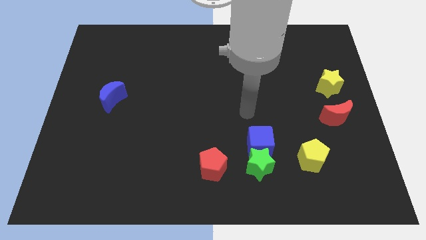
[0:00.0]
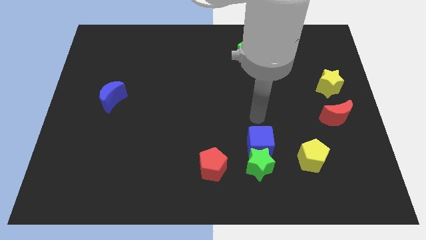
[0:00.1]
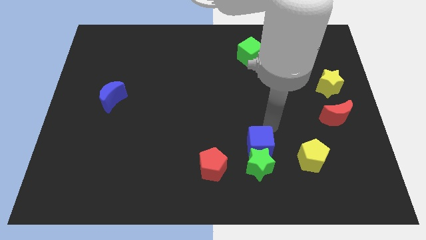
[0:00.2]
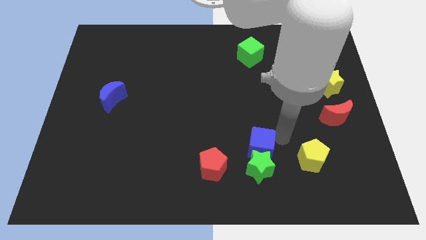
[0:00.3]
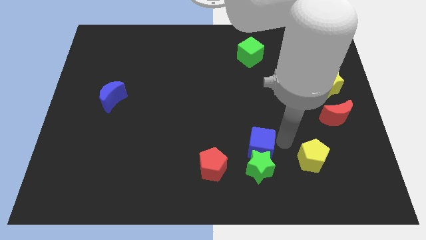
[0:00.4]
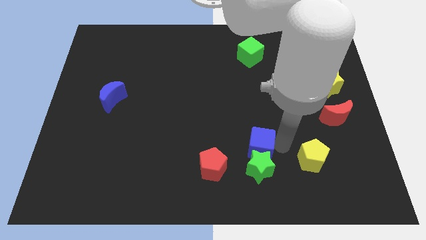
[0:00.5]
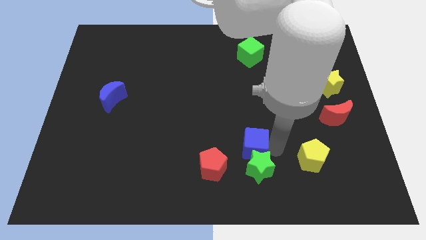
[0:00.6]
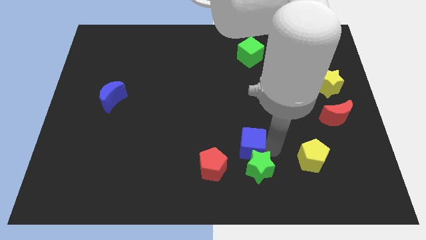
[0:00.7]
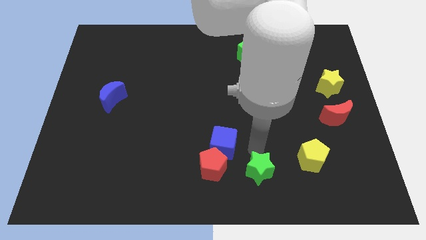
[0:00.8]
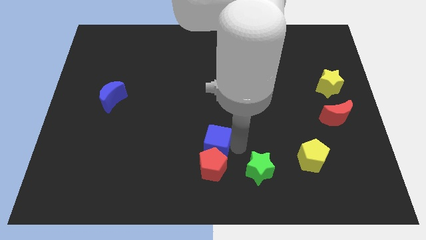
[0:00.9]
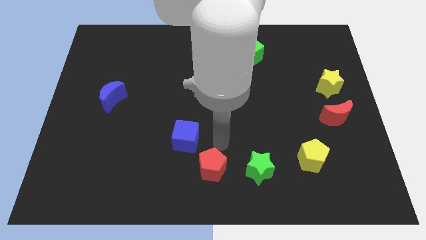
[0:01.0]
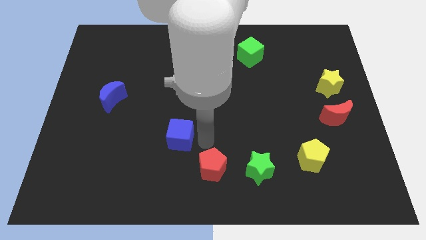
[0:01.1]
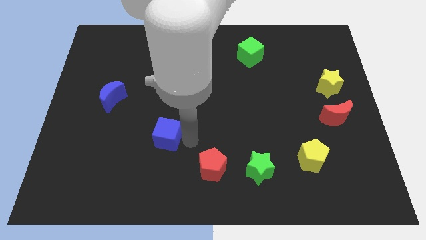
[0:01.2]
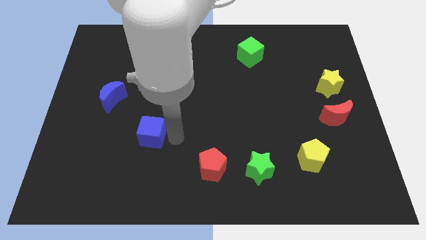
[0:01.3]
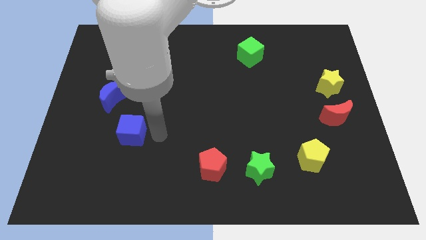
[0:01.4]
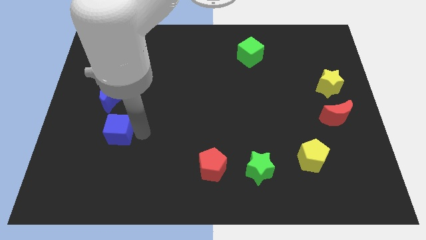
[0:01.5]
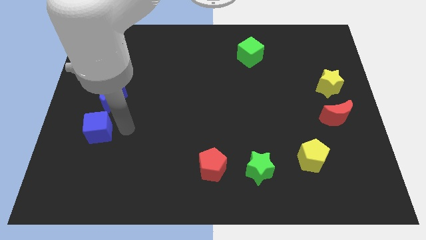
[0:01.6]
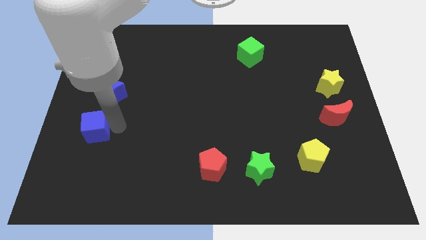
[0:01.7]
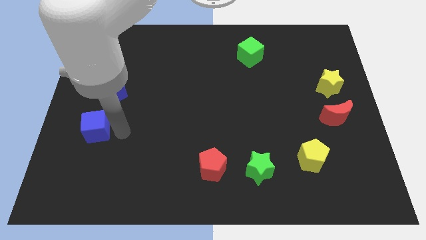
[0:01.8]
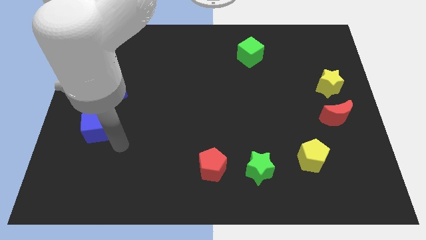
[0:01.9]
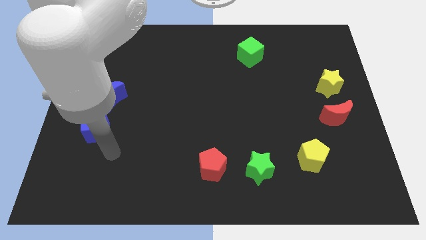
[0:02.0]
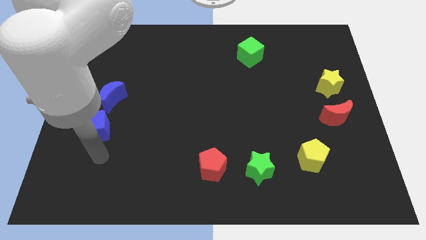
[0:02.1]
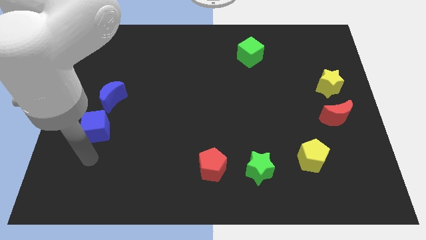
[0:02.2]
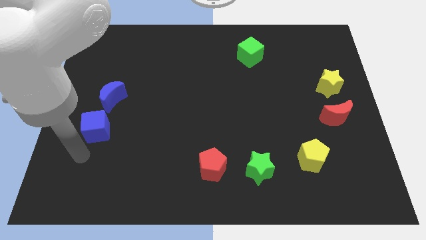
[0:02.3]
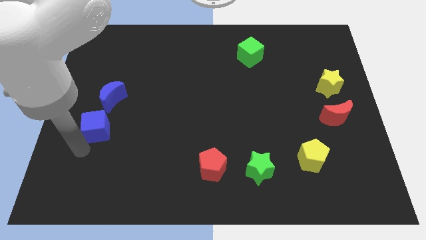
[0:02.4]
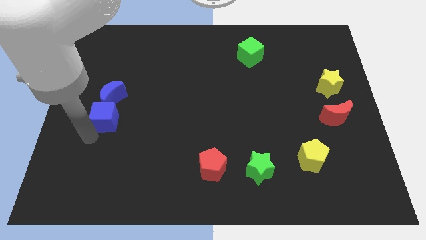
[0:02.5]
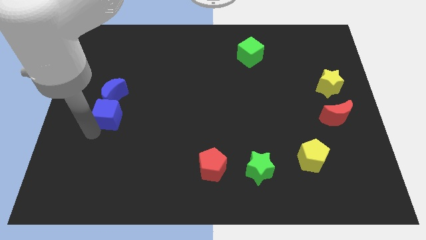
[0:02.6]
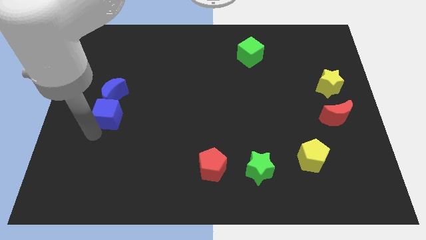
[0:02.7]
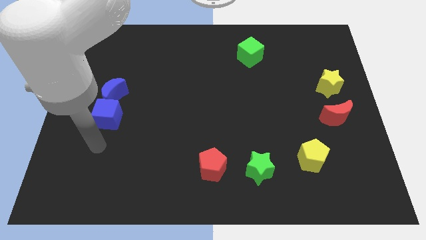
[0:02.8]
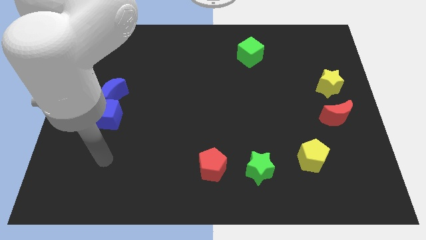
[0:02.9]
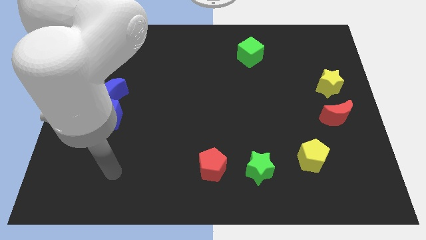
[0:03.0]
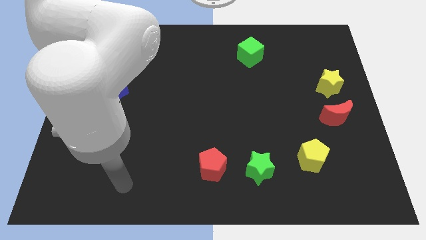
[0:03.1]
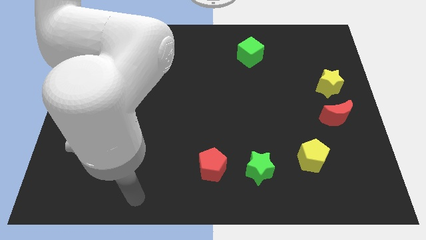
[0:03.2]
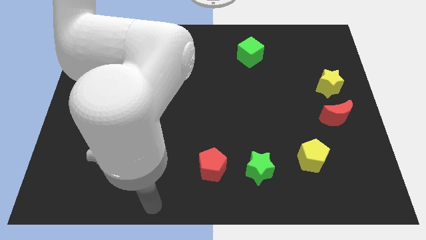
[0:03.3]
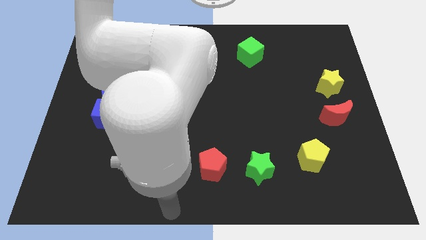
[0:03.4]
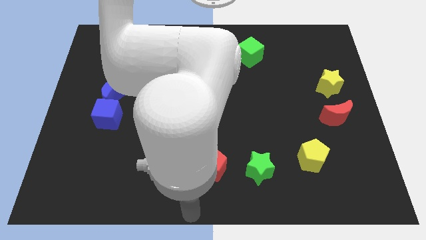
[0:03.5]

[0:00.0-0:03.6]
push the blue cube to the bottom of the blue crescent

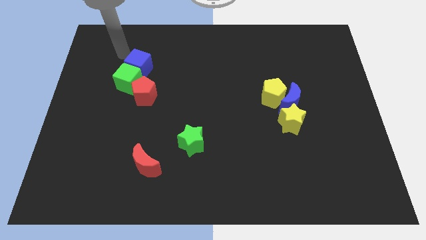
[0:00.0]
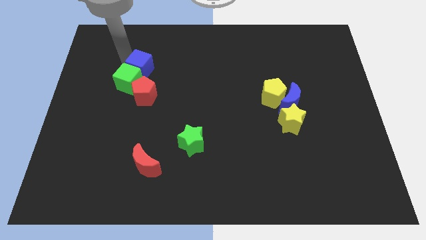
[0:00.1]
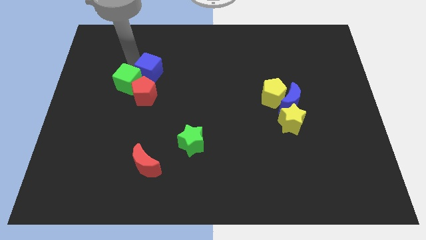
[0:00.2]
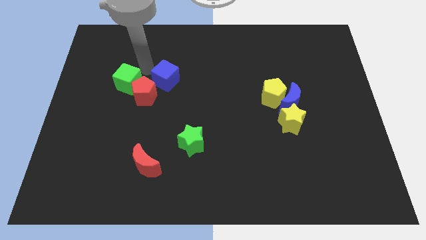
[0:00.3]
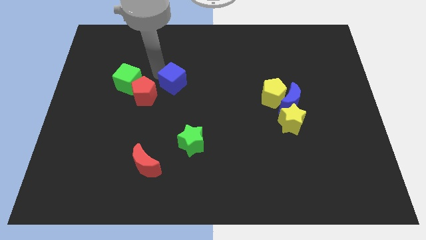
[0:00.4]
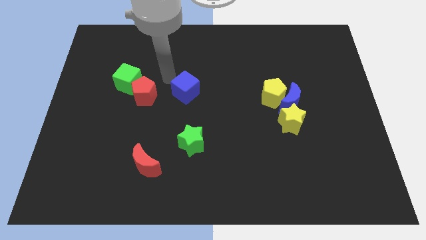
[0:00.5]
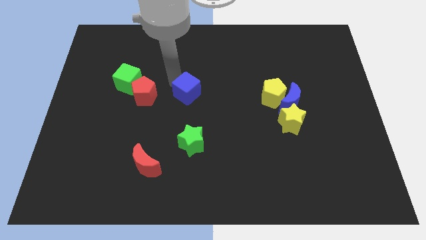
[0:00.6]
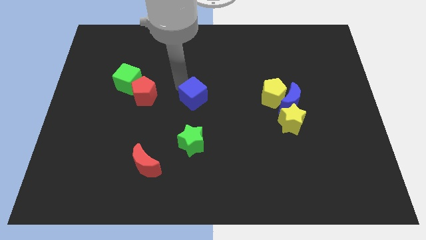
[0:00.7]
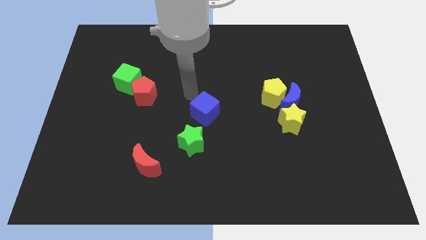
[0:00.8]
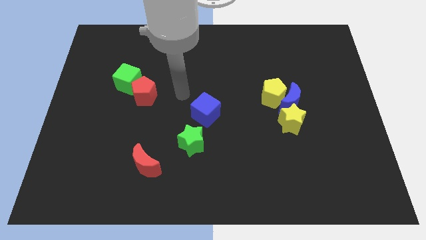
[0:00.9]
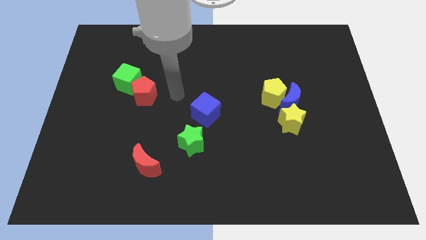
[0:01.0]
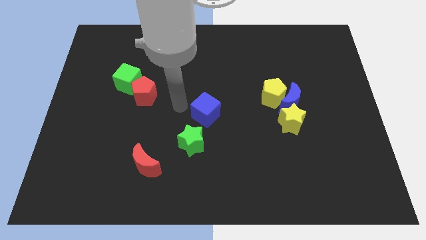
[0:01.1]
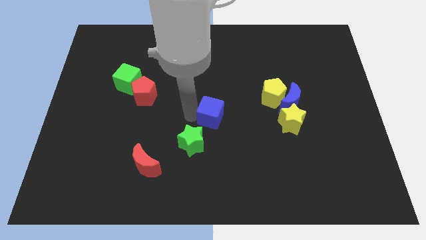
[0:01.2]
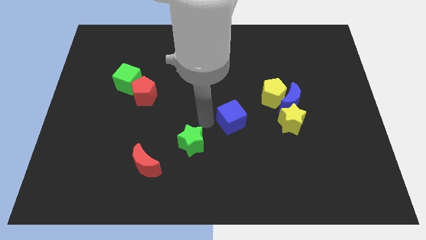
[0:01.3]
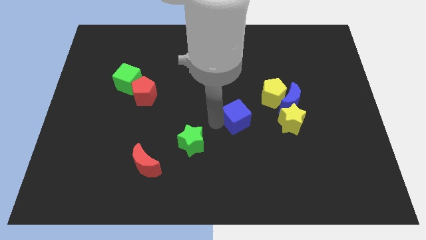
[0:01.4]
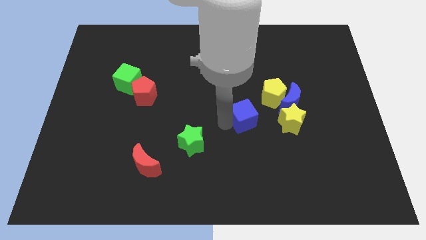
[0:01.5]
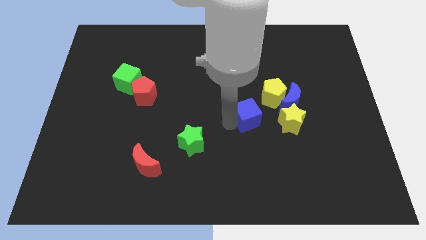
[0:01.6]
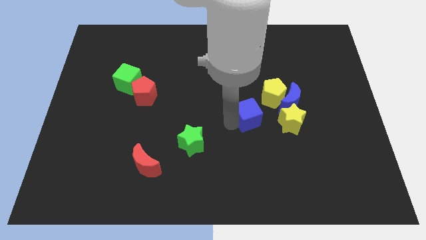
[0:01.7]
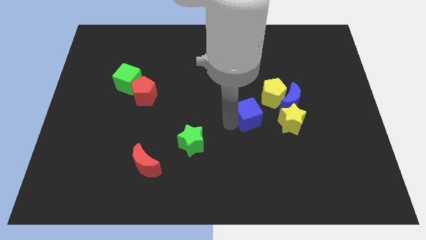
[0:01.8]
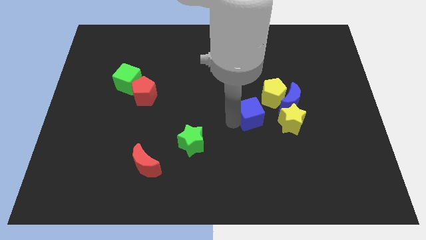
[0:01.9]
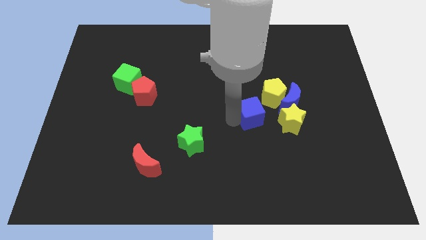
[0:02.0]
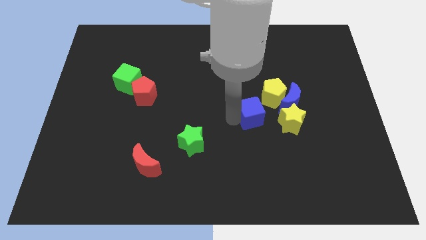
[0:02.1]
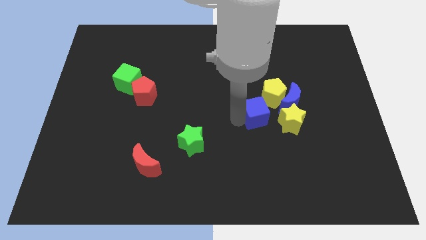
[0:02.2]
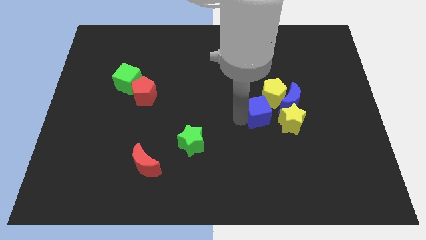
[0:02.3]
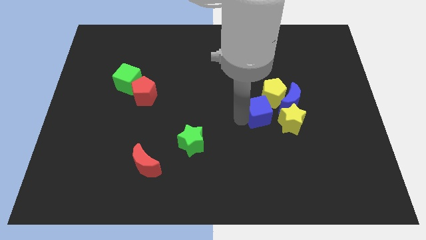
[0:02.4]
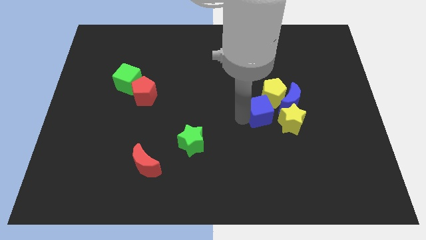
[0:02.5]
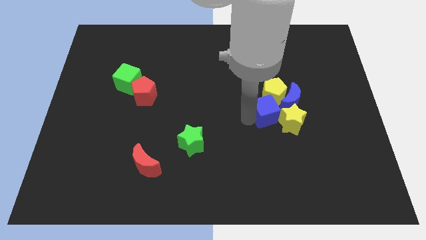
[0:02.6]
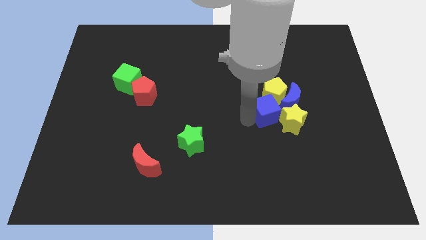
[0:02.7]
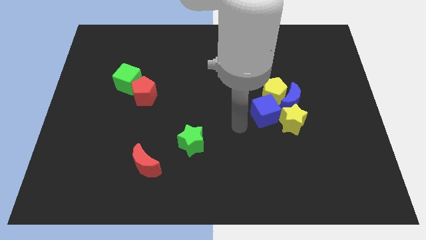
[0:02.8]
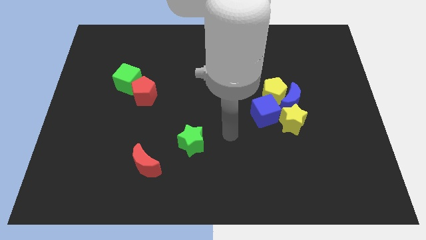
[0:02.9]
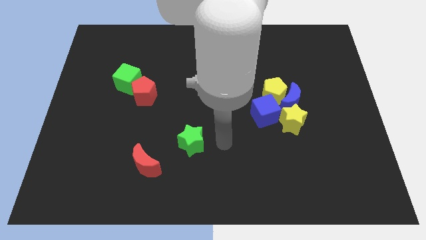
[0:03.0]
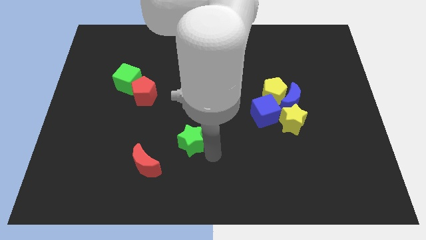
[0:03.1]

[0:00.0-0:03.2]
move the blue cube into the group of blocks

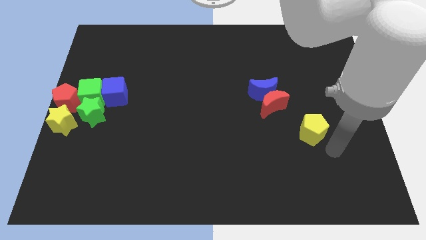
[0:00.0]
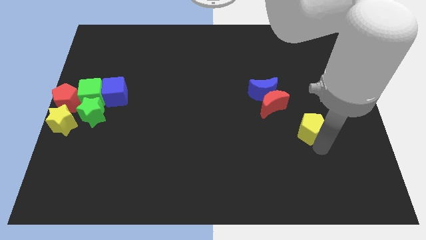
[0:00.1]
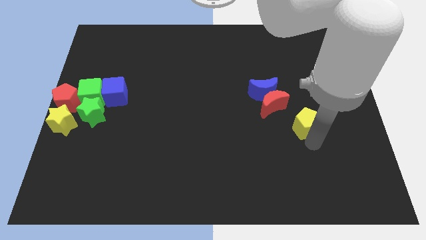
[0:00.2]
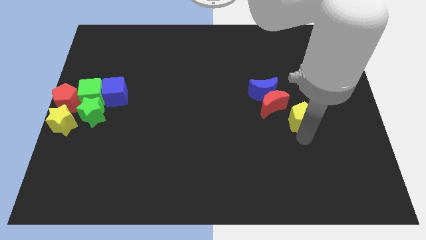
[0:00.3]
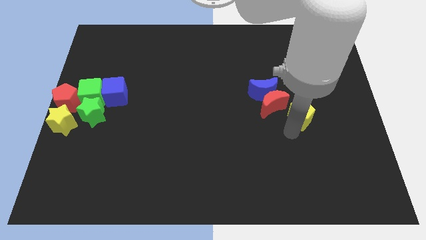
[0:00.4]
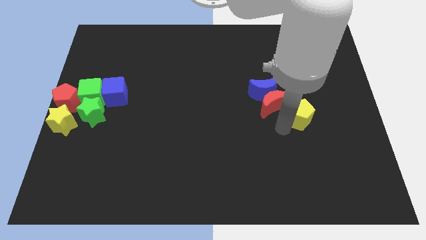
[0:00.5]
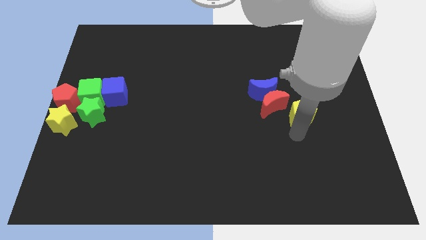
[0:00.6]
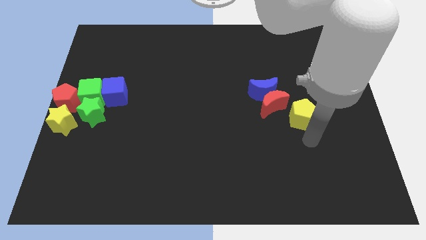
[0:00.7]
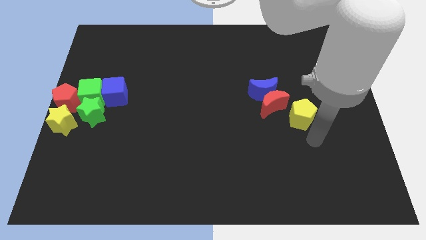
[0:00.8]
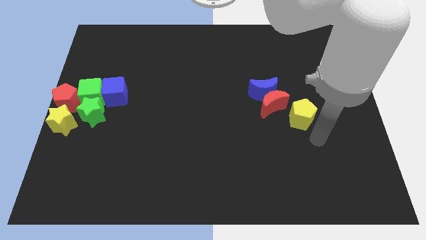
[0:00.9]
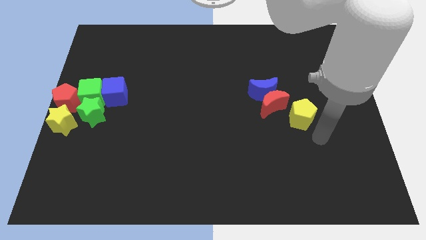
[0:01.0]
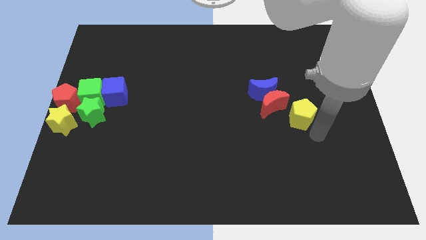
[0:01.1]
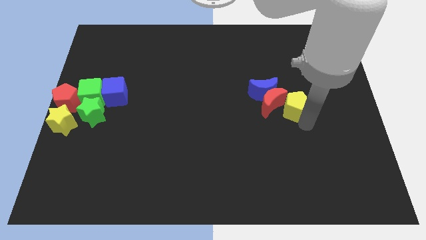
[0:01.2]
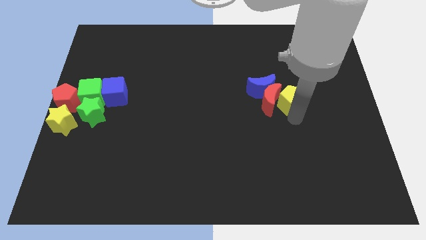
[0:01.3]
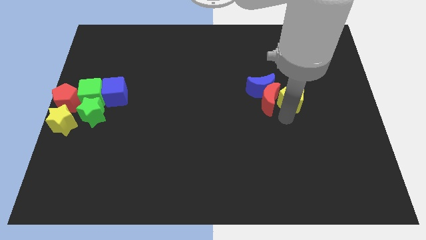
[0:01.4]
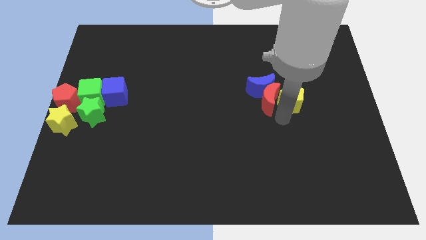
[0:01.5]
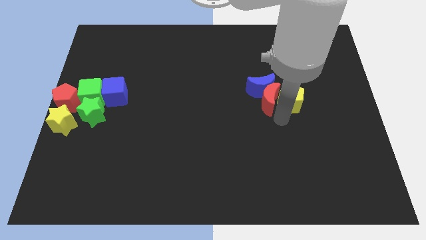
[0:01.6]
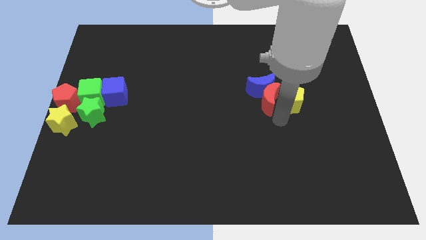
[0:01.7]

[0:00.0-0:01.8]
move the yellow pentagon to the right side of the red crescent

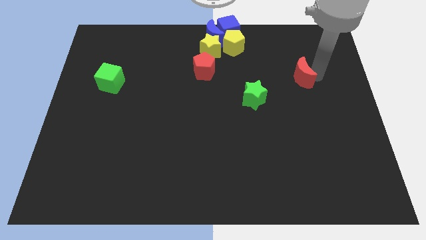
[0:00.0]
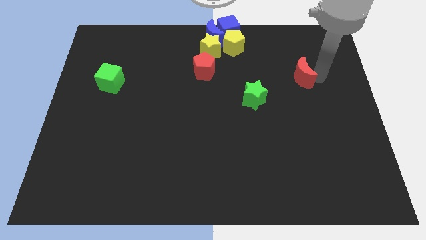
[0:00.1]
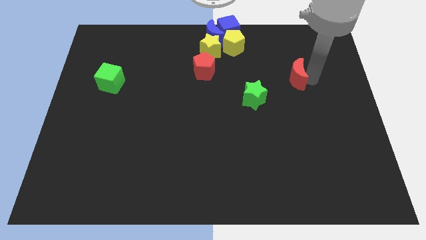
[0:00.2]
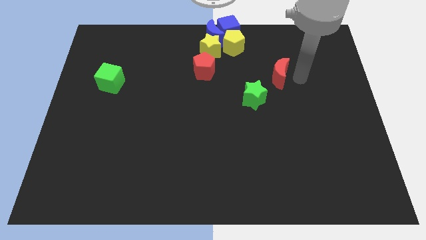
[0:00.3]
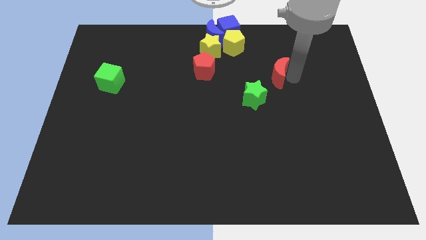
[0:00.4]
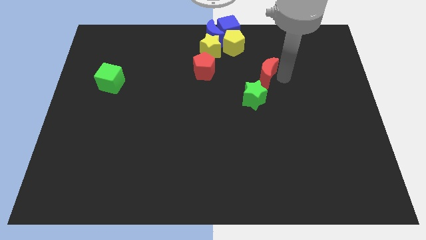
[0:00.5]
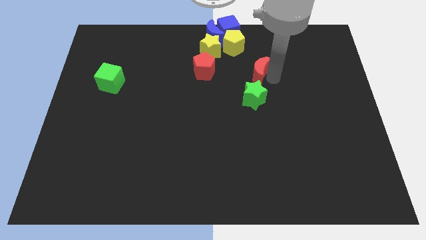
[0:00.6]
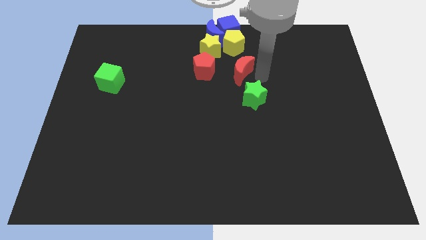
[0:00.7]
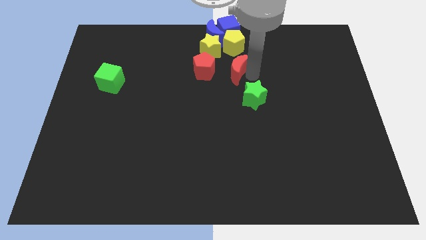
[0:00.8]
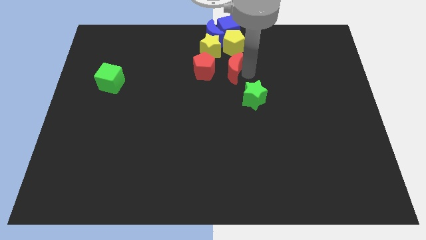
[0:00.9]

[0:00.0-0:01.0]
place the red moon above the green star
